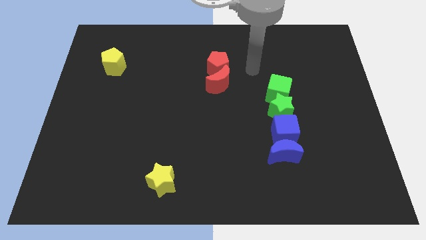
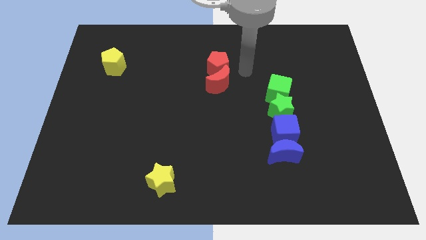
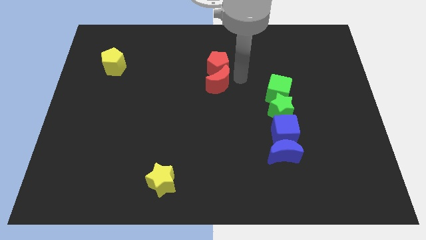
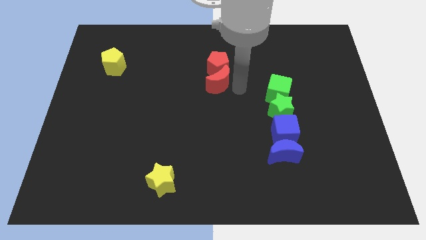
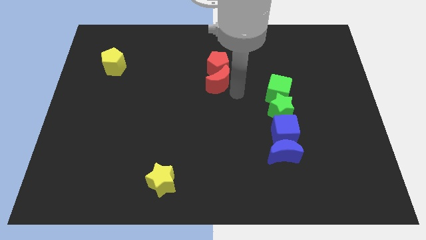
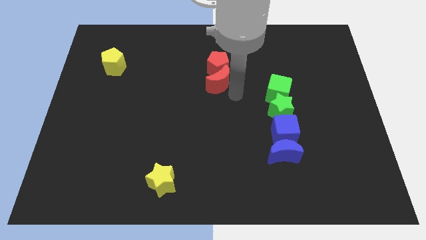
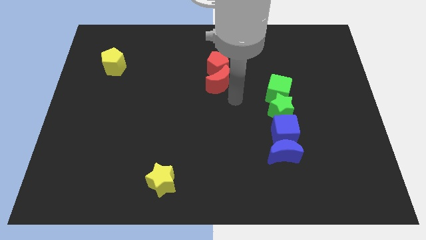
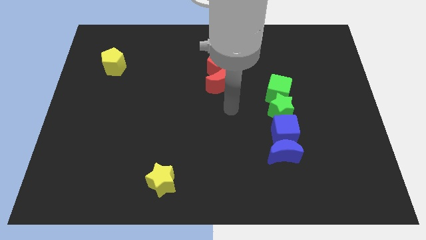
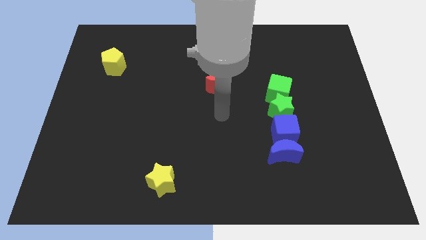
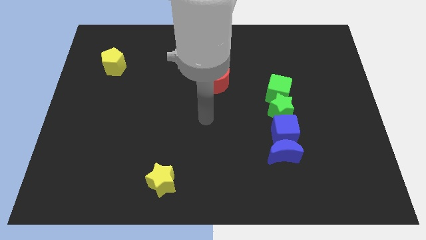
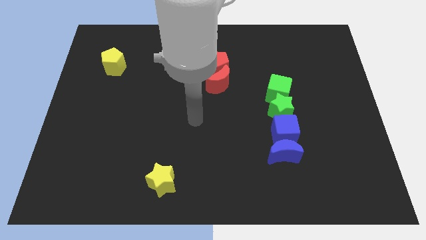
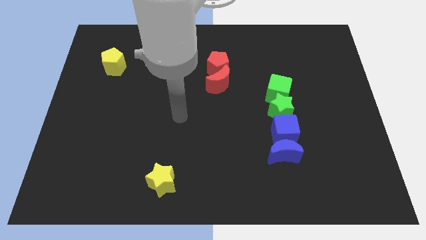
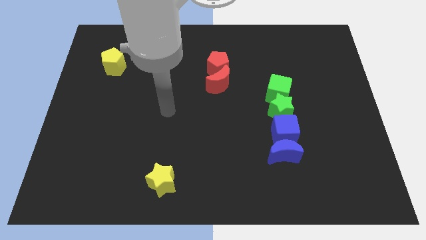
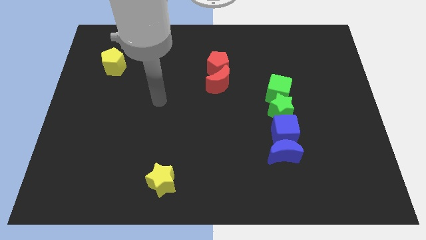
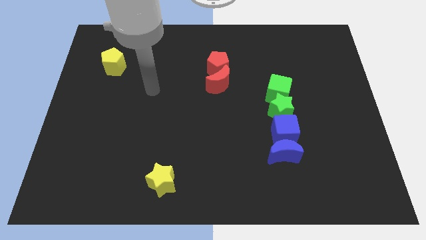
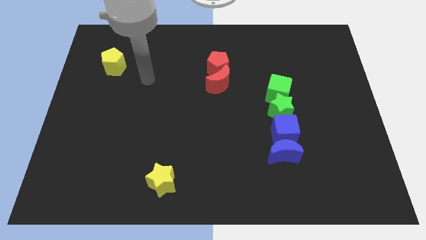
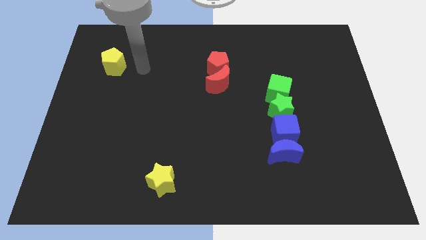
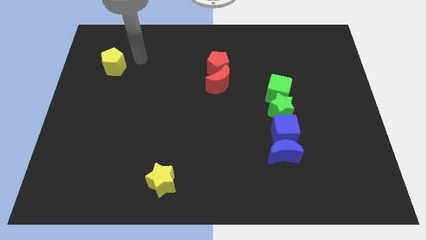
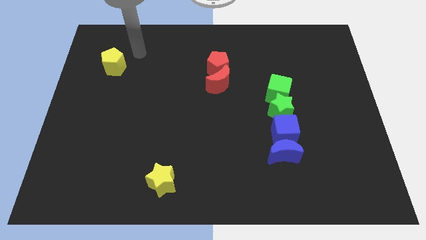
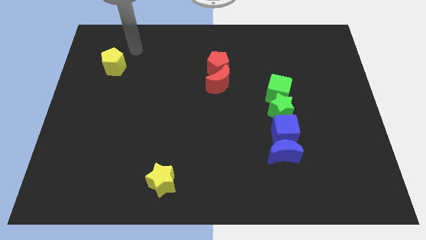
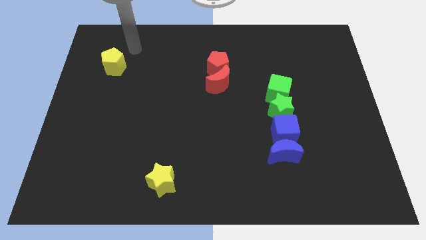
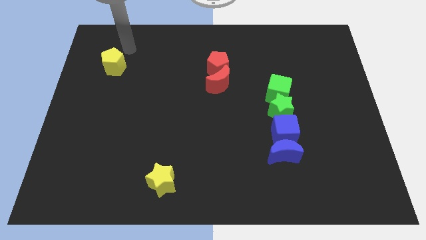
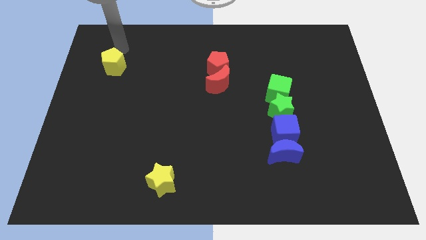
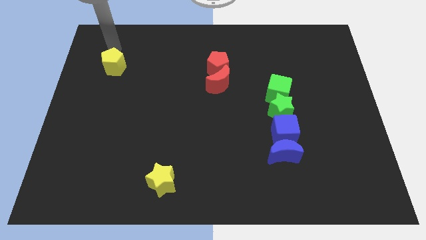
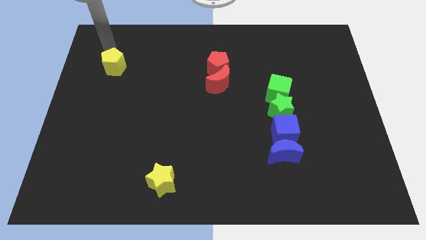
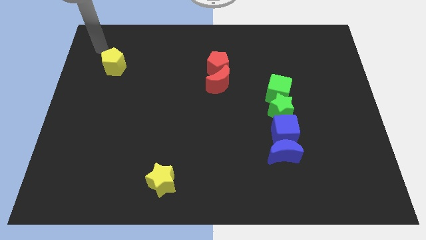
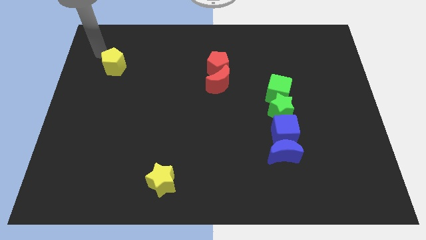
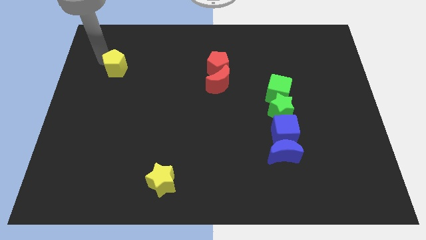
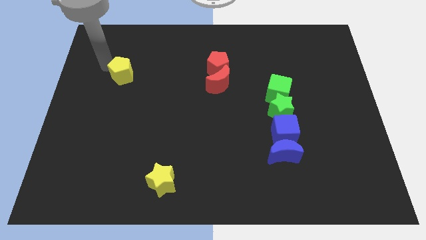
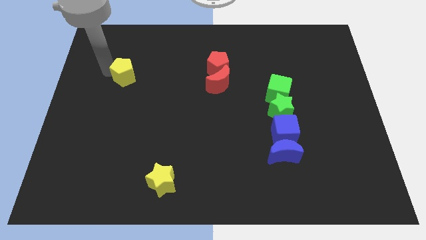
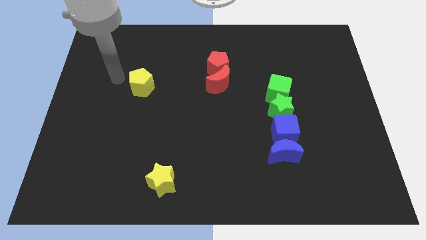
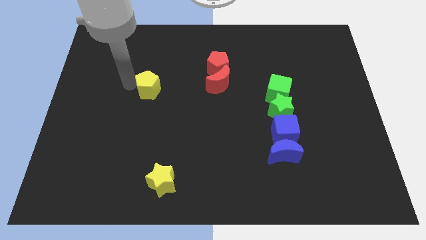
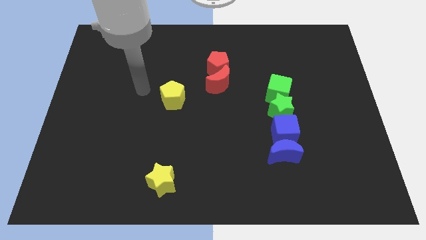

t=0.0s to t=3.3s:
push the yellow pentagon towards the bottom left side of the red moon

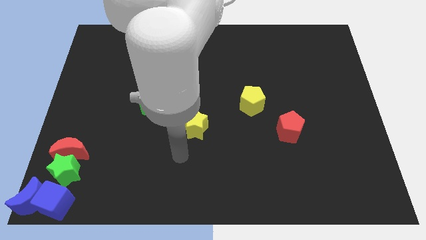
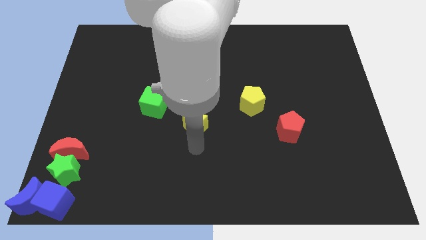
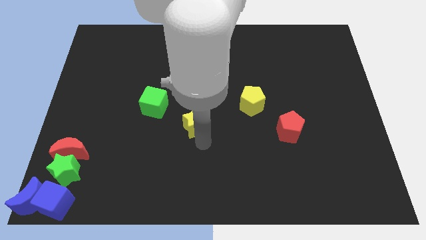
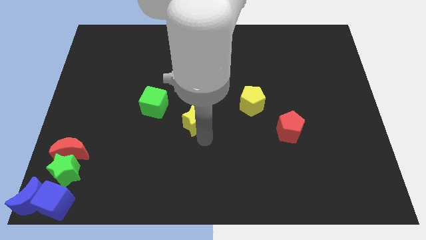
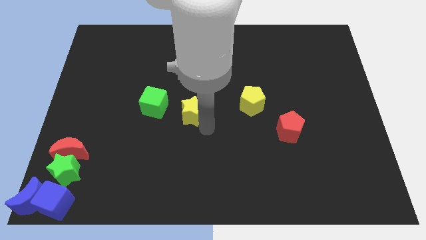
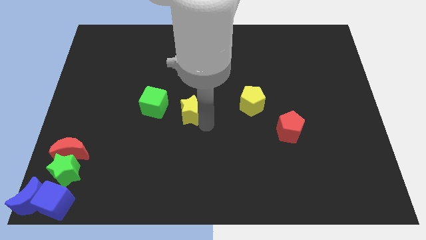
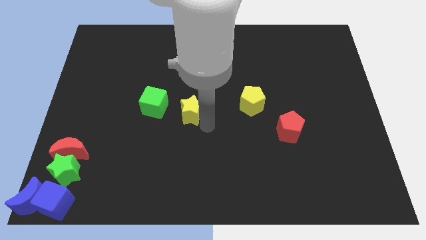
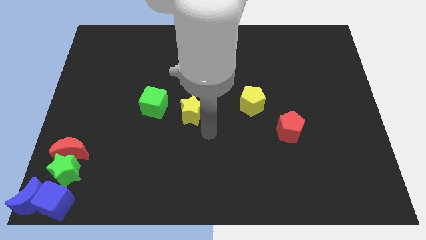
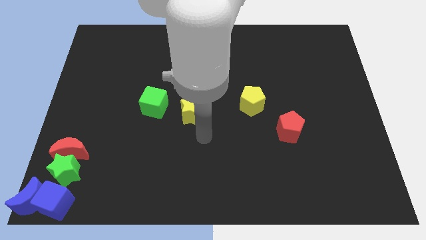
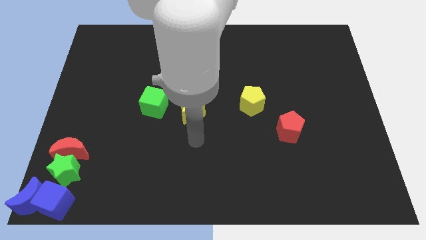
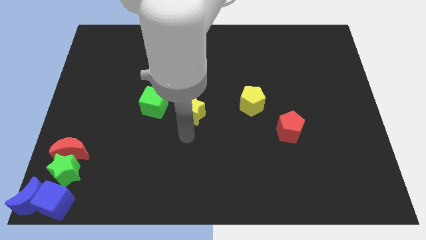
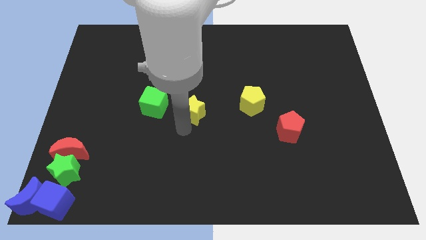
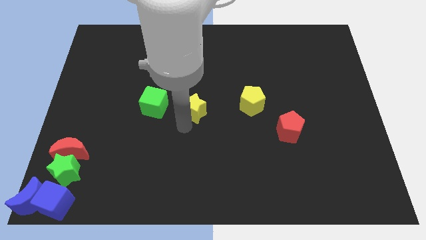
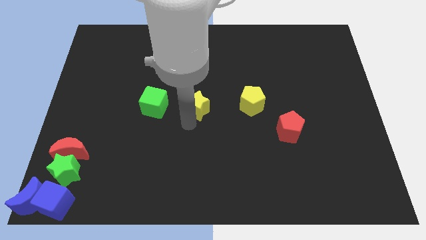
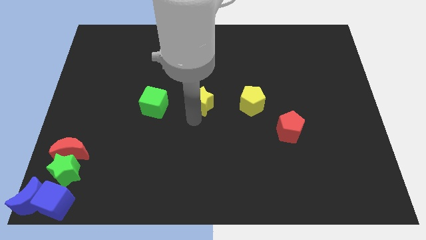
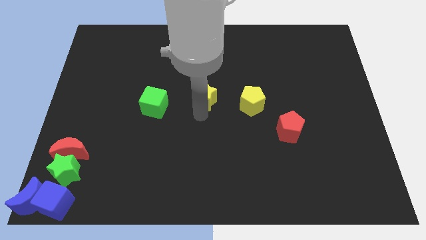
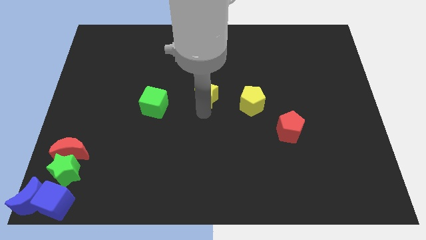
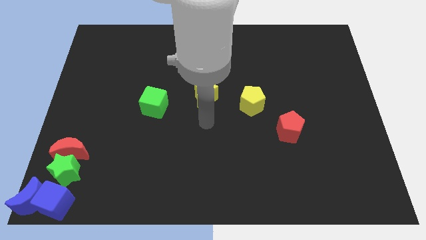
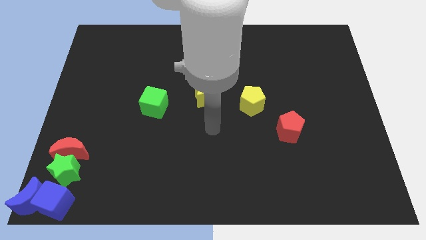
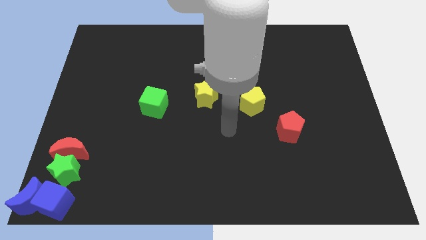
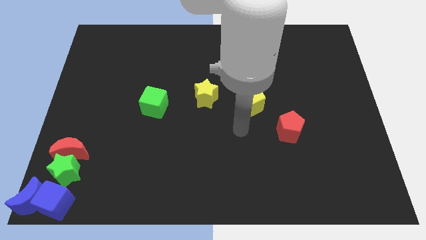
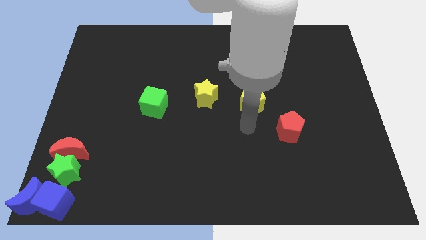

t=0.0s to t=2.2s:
push the yellow star upward

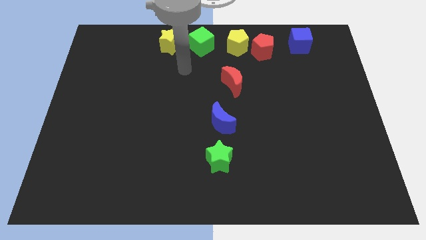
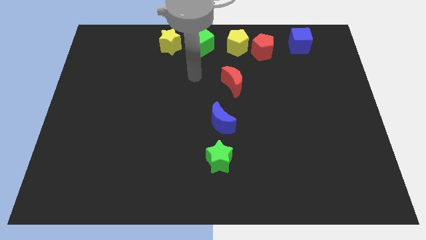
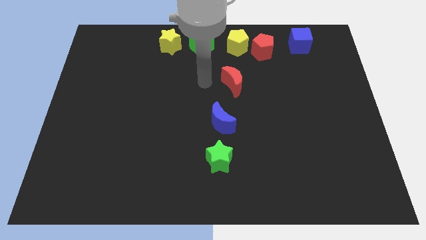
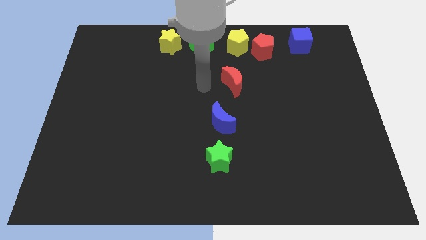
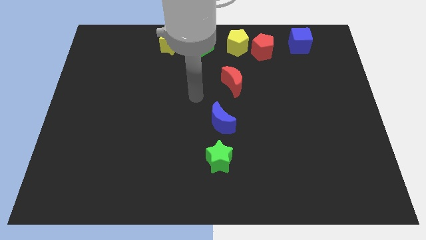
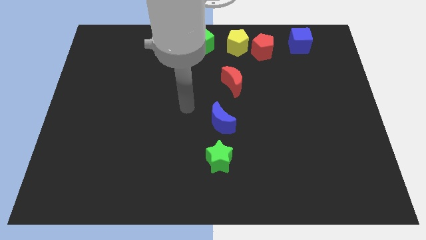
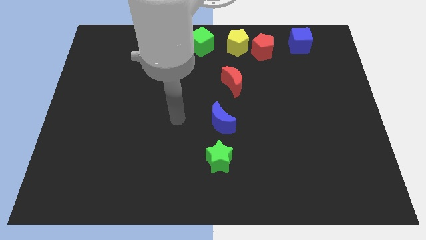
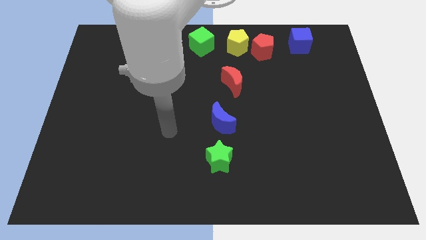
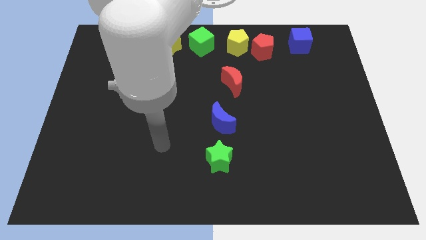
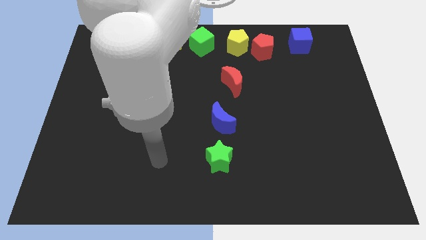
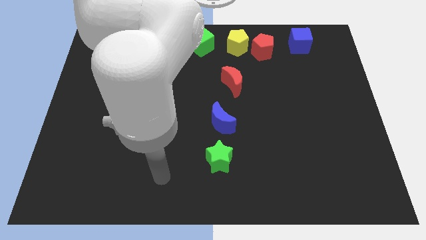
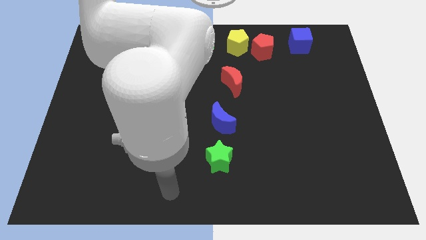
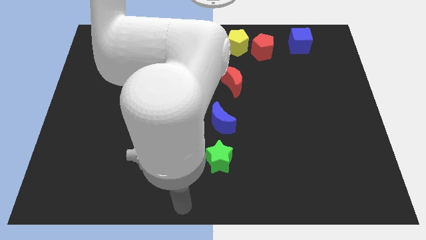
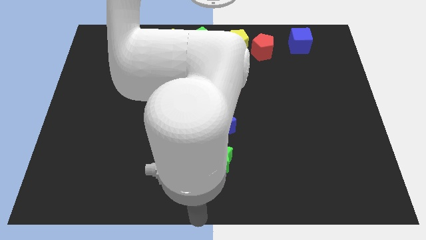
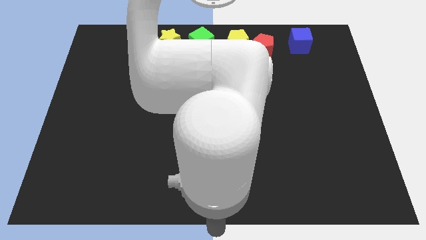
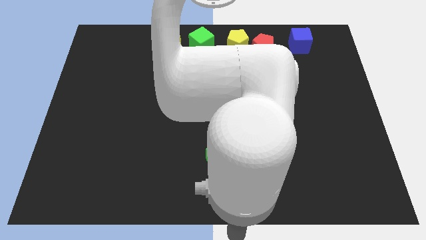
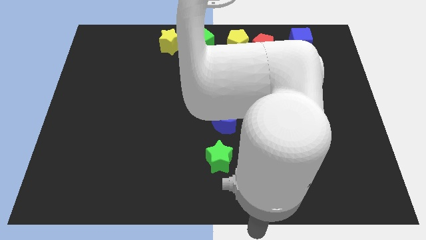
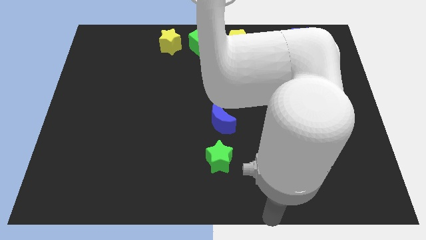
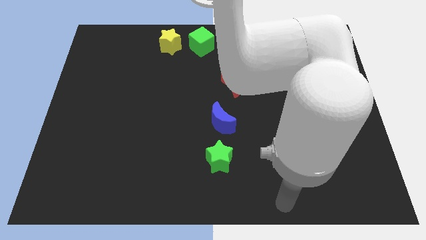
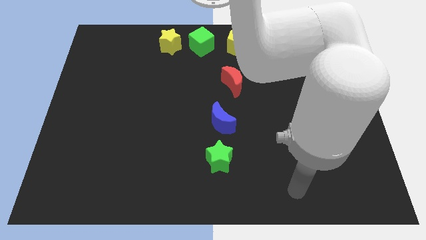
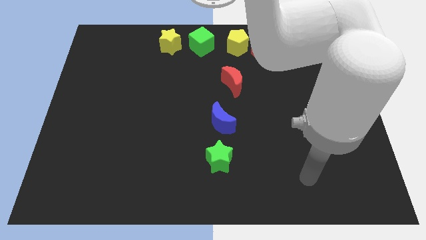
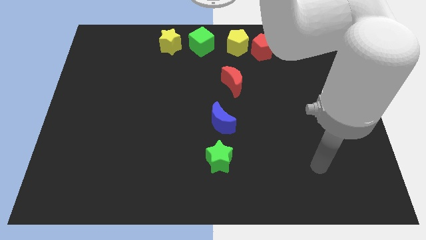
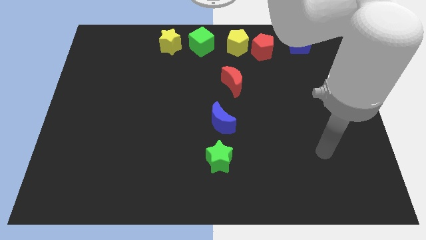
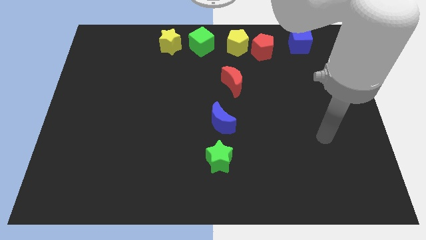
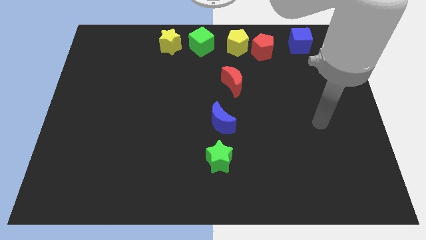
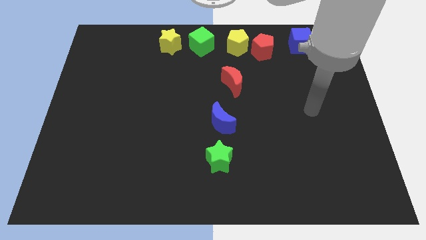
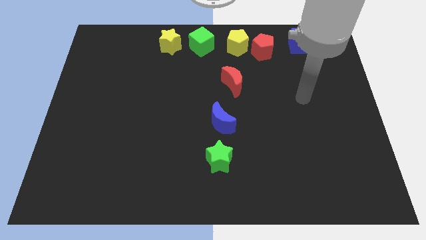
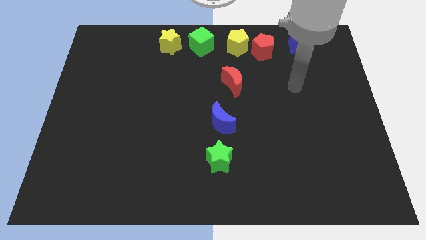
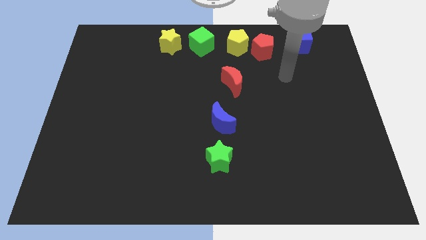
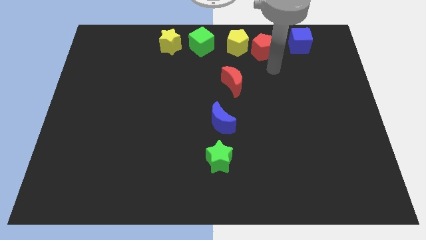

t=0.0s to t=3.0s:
move your arm away from the yellow star

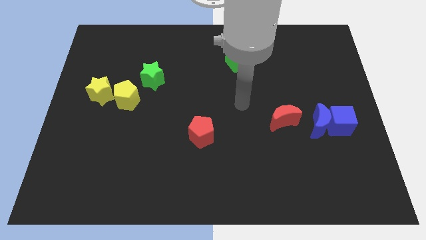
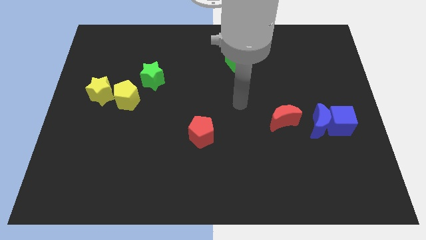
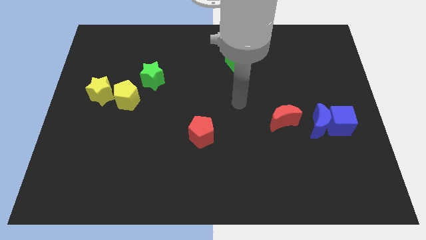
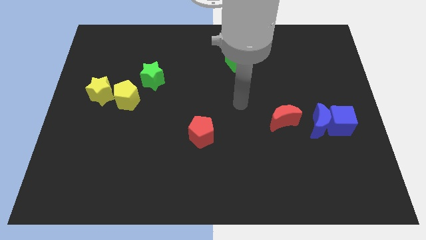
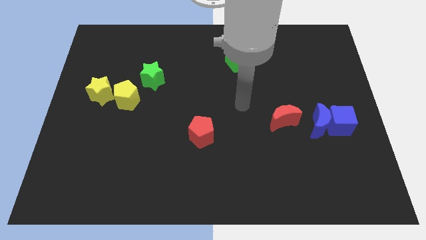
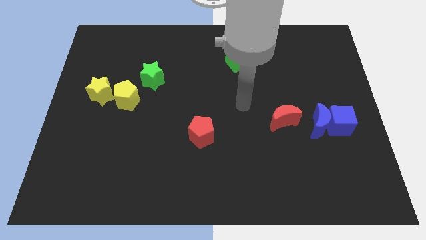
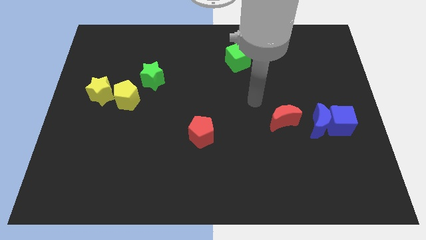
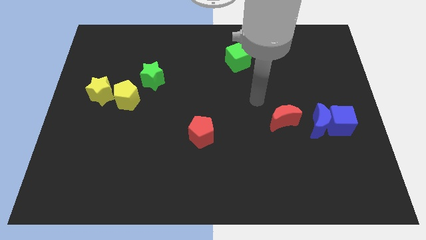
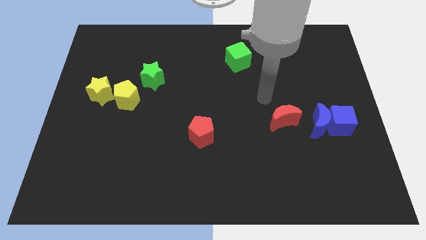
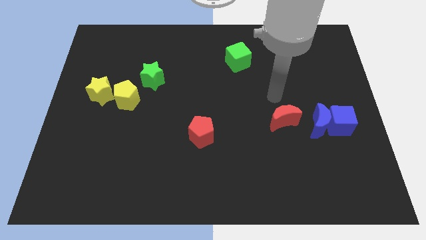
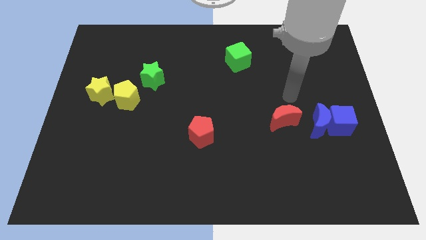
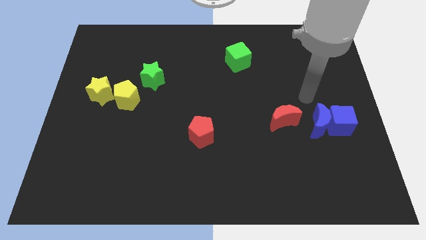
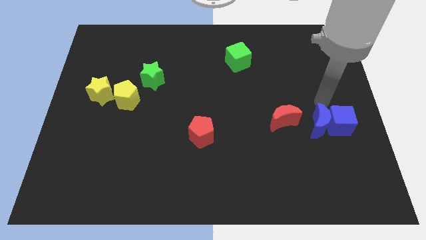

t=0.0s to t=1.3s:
point your hand above the blue crescent
